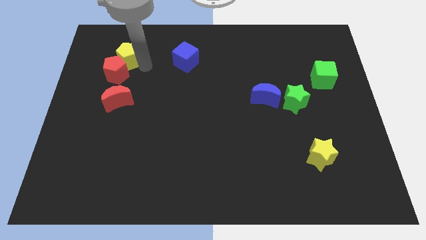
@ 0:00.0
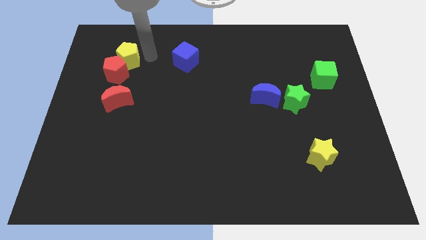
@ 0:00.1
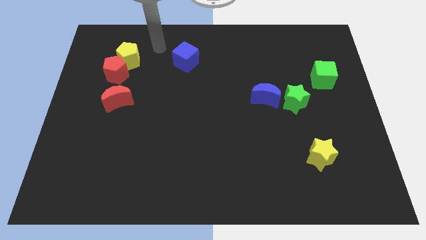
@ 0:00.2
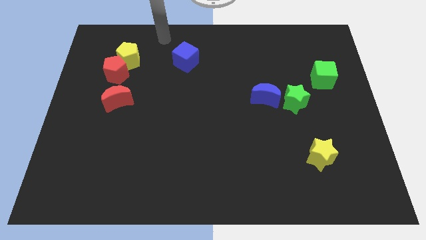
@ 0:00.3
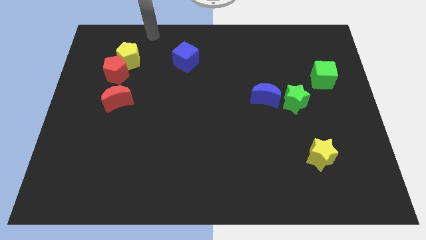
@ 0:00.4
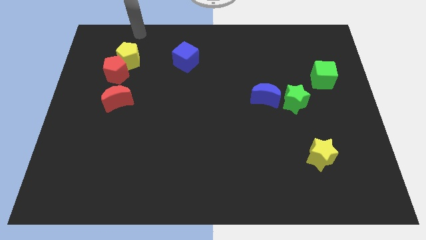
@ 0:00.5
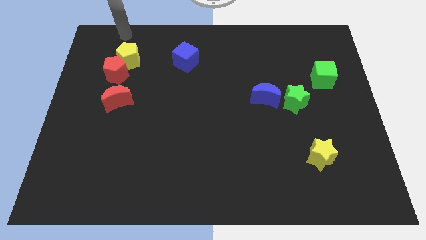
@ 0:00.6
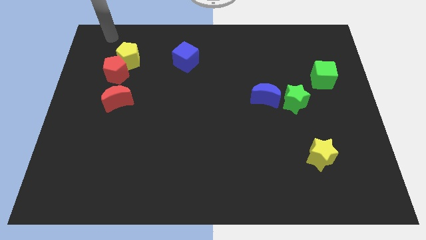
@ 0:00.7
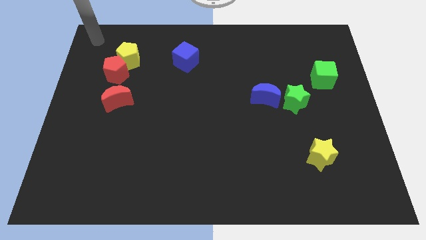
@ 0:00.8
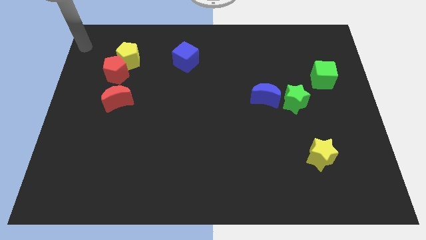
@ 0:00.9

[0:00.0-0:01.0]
move yourself away from the yellow pentagon

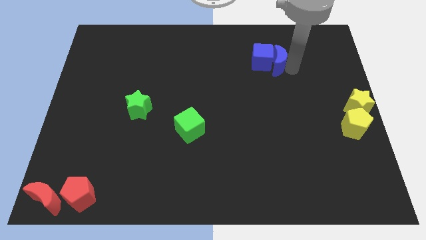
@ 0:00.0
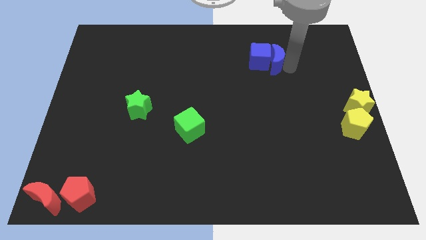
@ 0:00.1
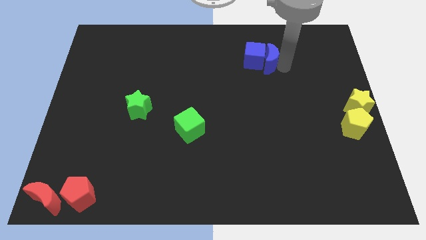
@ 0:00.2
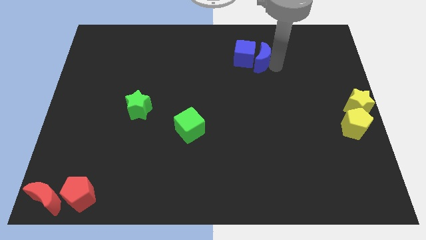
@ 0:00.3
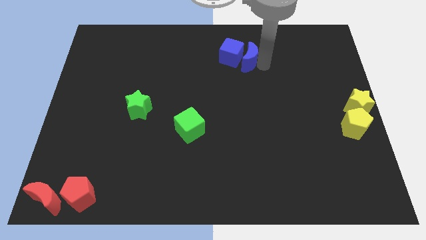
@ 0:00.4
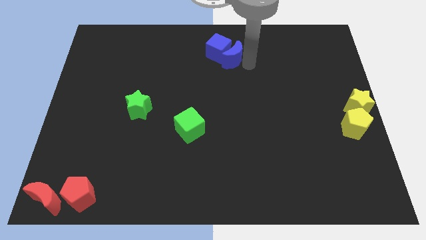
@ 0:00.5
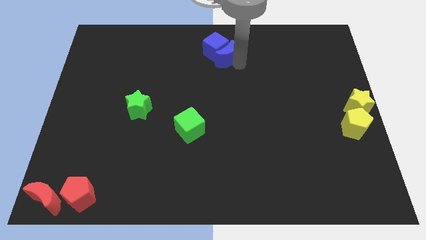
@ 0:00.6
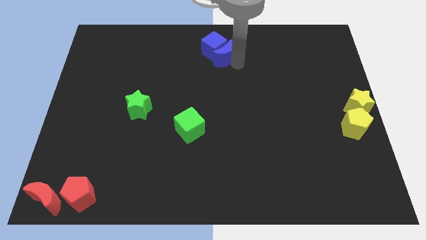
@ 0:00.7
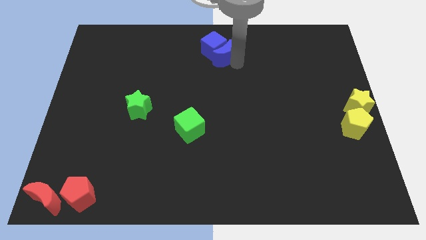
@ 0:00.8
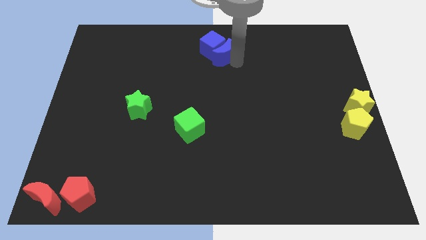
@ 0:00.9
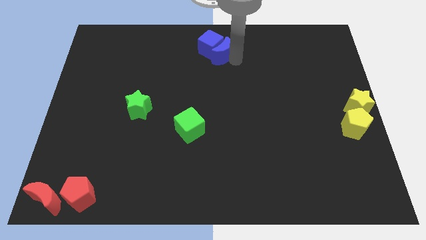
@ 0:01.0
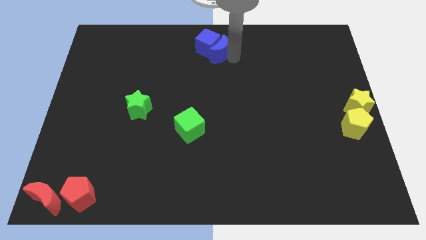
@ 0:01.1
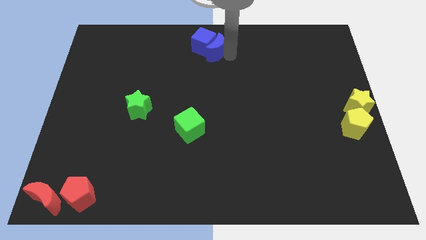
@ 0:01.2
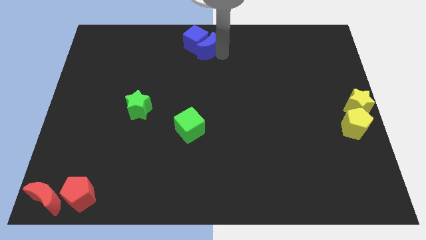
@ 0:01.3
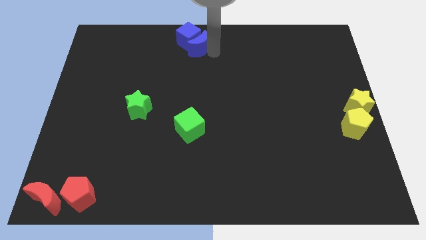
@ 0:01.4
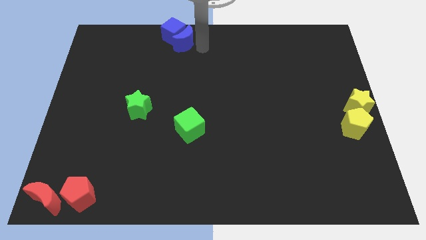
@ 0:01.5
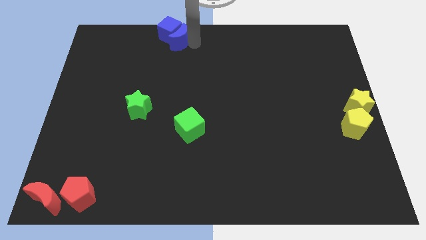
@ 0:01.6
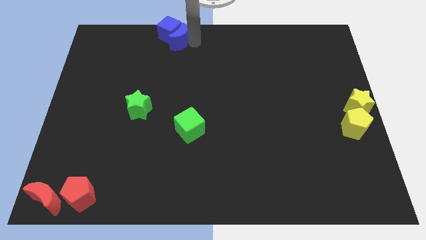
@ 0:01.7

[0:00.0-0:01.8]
push the blue cube at center top

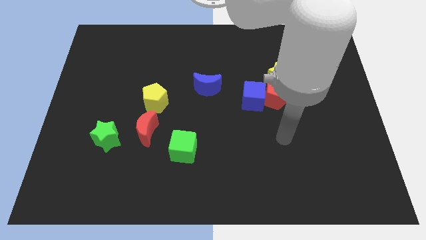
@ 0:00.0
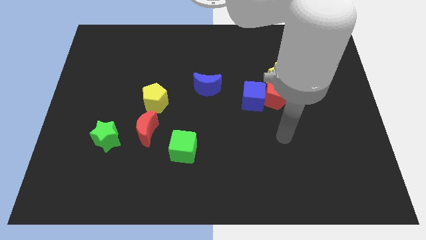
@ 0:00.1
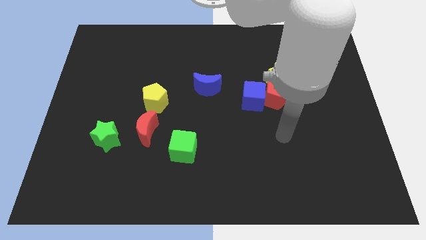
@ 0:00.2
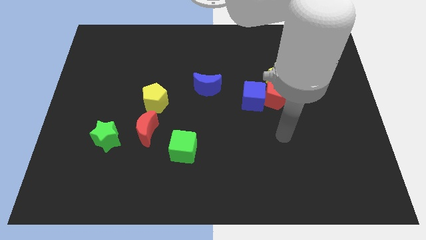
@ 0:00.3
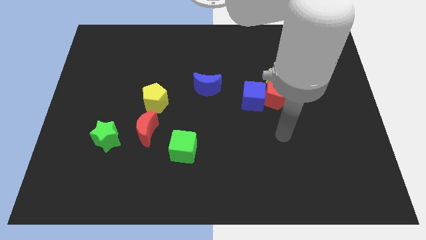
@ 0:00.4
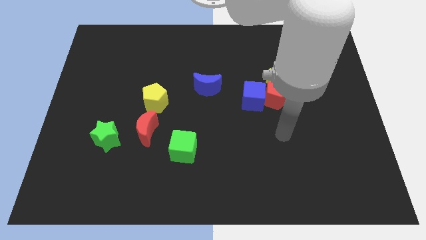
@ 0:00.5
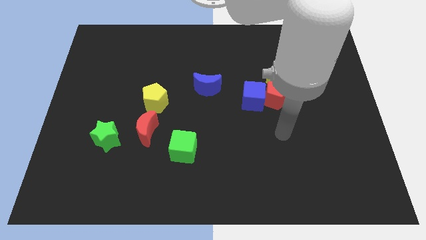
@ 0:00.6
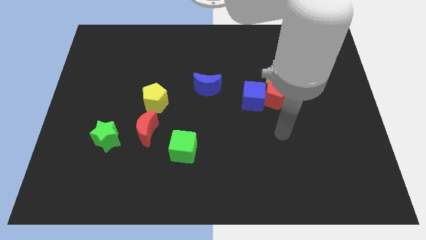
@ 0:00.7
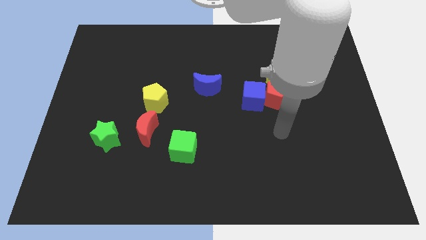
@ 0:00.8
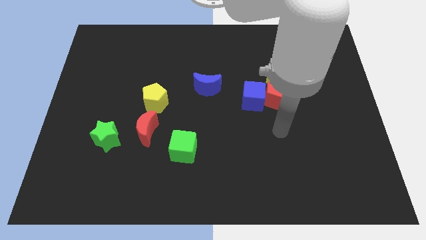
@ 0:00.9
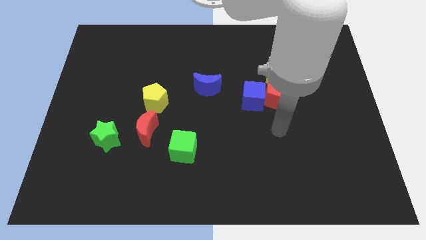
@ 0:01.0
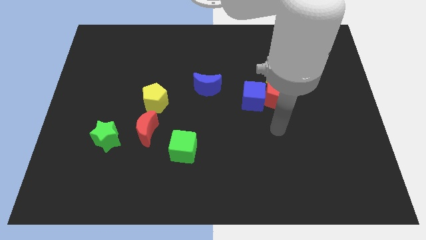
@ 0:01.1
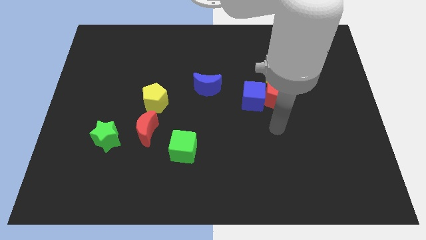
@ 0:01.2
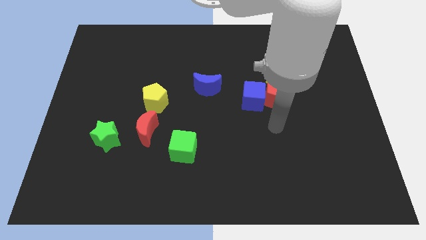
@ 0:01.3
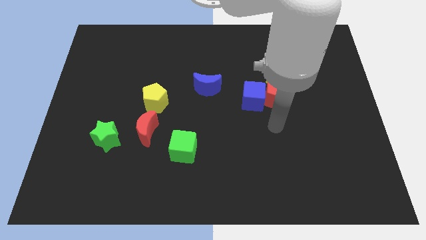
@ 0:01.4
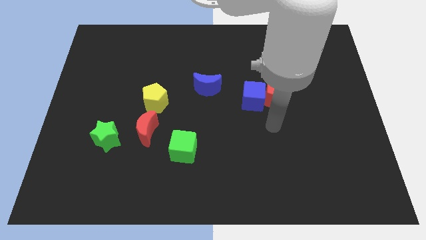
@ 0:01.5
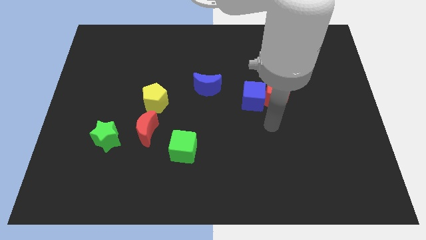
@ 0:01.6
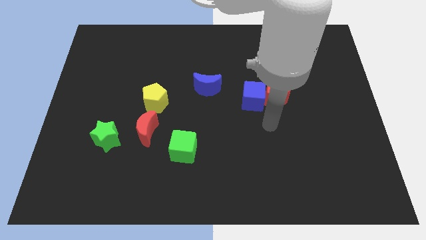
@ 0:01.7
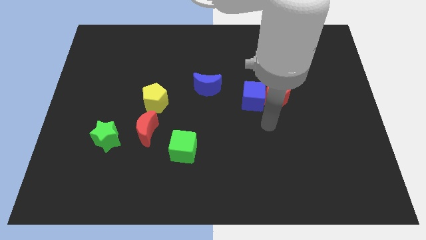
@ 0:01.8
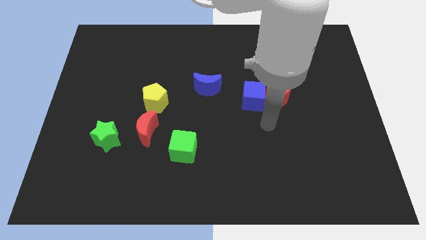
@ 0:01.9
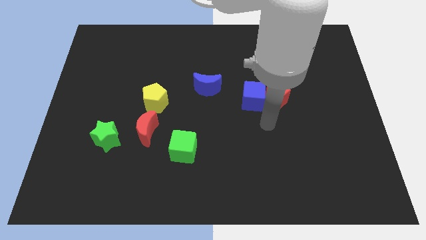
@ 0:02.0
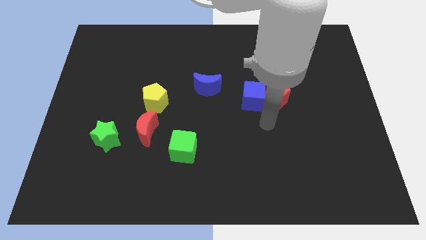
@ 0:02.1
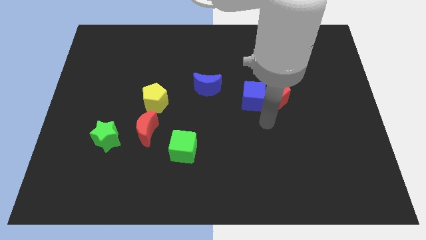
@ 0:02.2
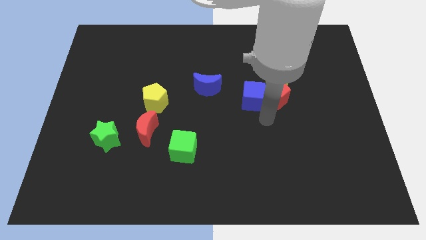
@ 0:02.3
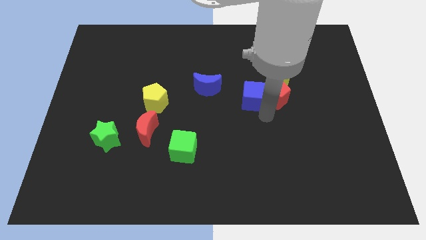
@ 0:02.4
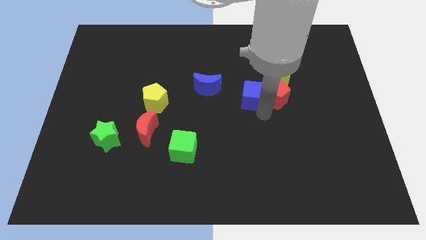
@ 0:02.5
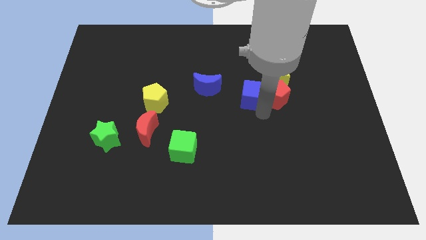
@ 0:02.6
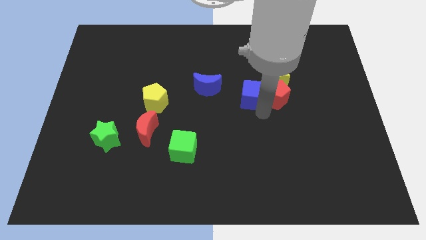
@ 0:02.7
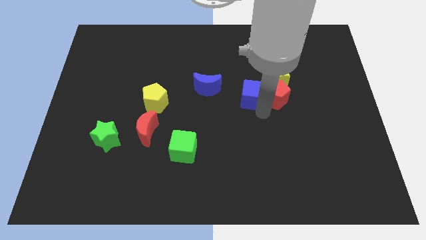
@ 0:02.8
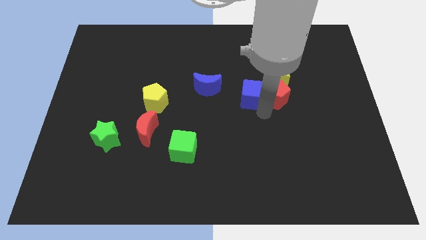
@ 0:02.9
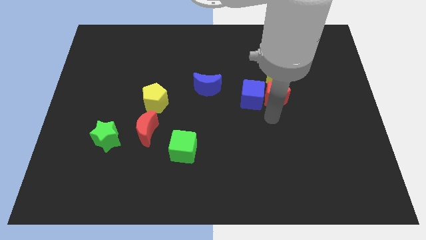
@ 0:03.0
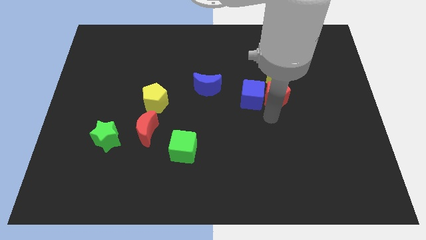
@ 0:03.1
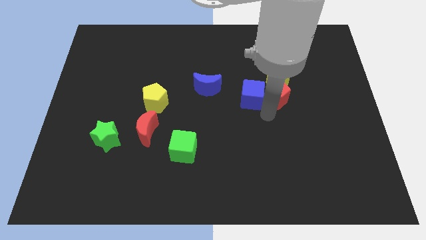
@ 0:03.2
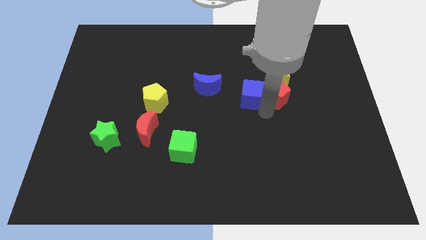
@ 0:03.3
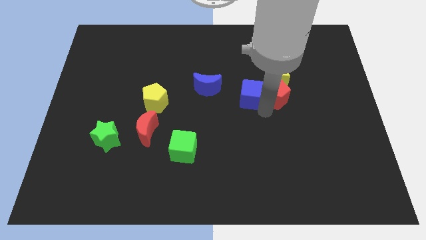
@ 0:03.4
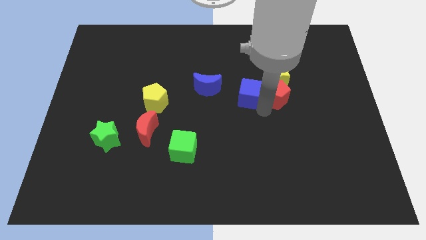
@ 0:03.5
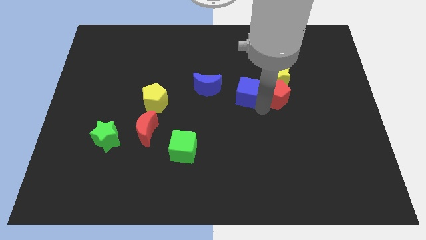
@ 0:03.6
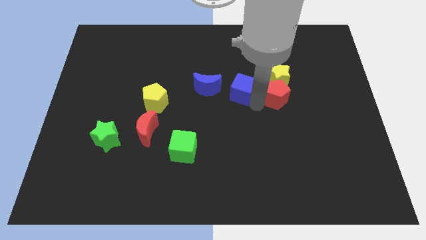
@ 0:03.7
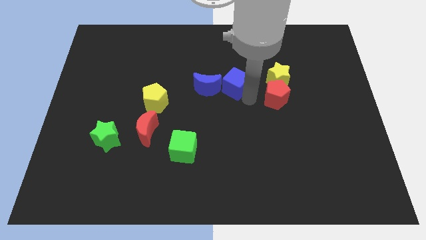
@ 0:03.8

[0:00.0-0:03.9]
move the blue cube to the right of the blue crescent

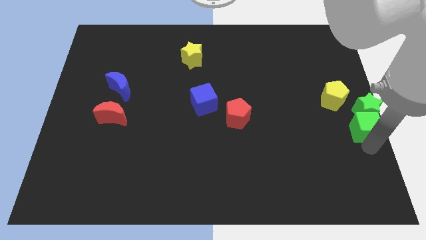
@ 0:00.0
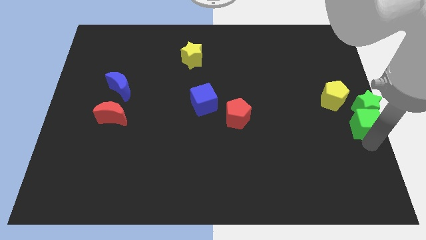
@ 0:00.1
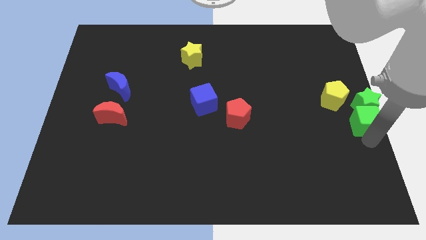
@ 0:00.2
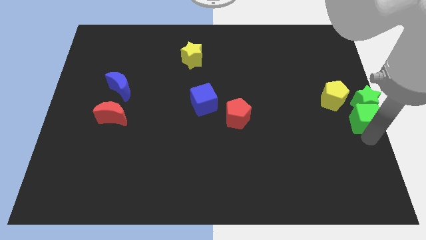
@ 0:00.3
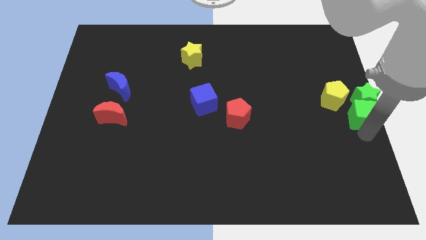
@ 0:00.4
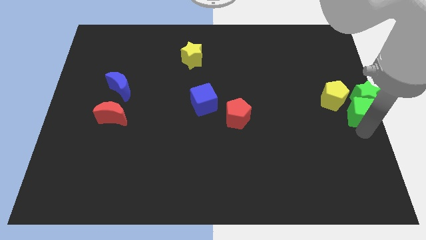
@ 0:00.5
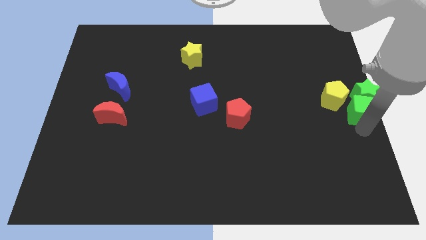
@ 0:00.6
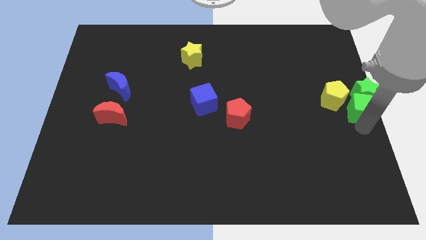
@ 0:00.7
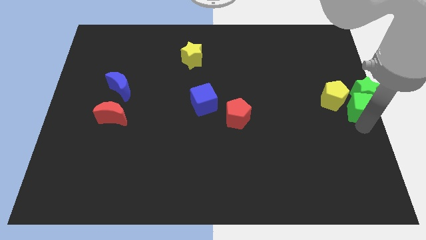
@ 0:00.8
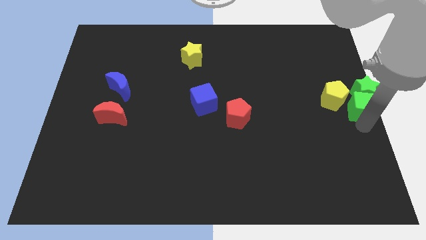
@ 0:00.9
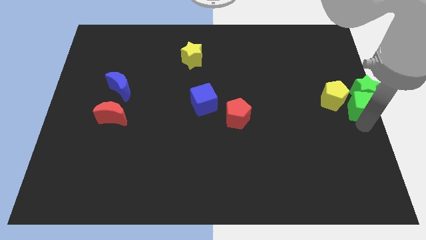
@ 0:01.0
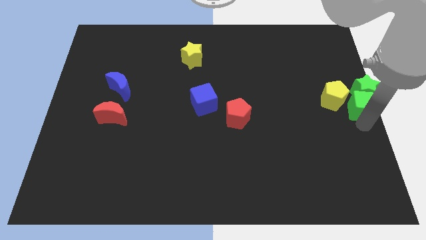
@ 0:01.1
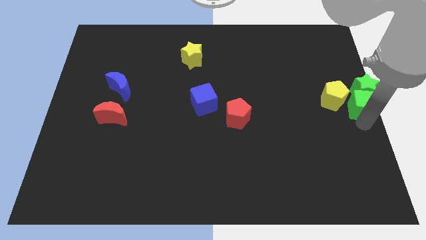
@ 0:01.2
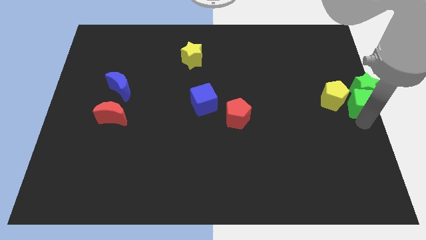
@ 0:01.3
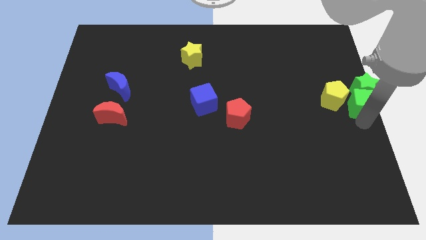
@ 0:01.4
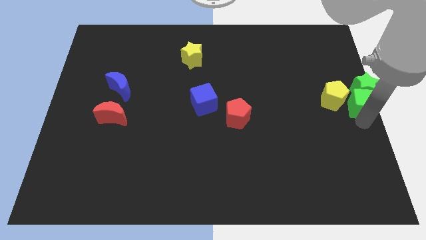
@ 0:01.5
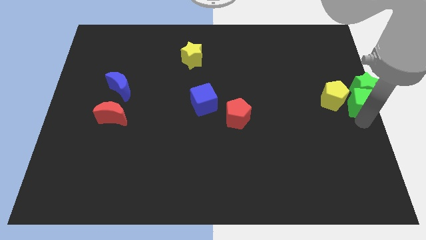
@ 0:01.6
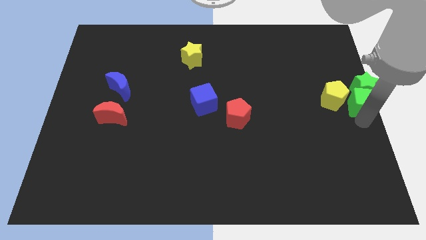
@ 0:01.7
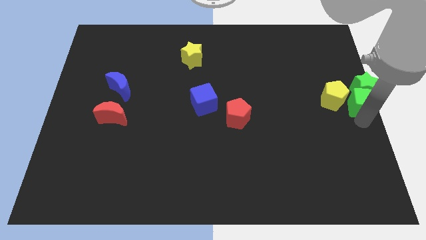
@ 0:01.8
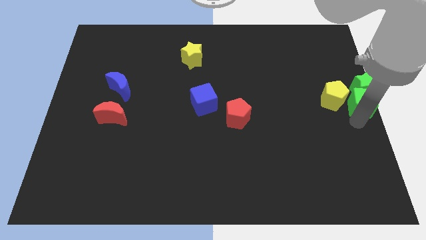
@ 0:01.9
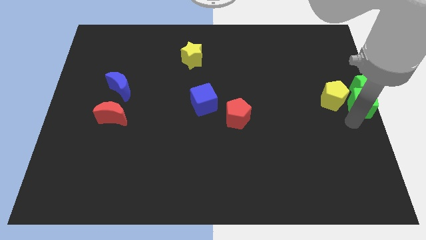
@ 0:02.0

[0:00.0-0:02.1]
push the green blocks to the right of yellow pentagon

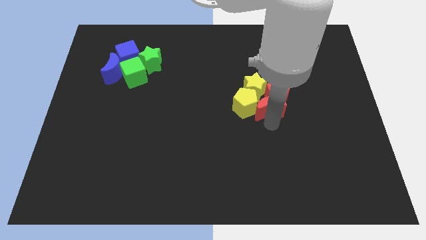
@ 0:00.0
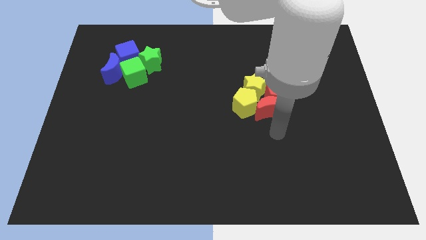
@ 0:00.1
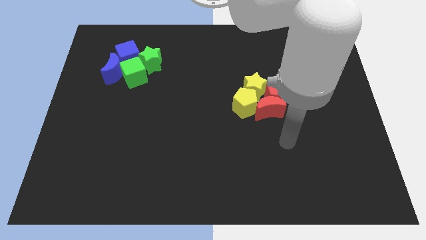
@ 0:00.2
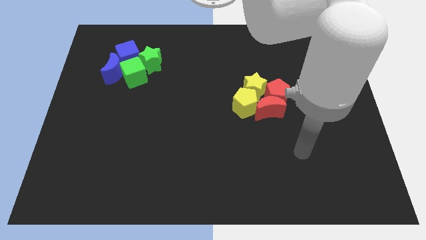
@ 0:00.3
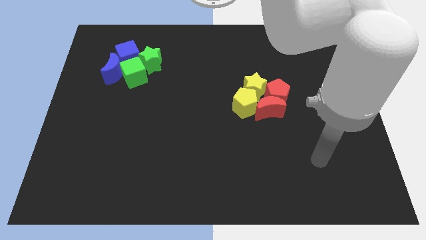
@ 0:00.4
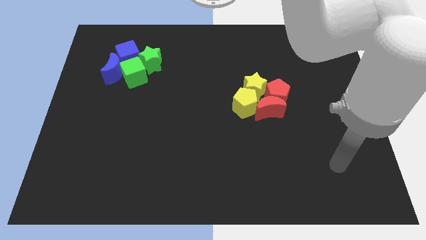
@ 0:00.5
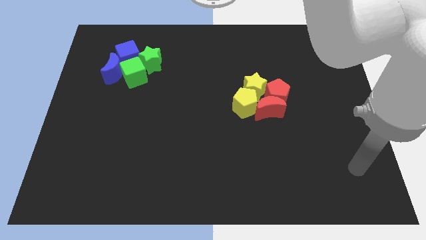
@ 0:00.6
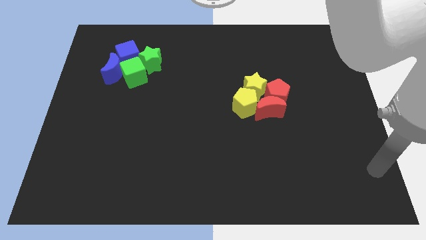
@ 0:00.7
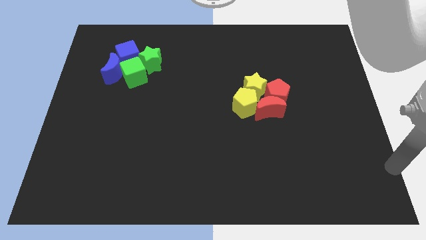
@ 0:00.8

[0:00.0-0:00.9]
move your arm towards the bottom right corner of the board
